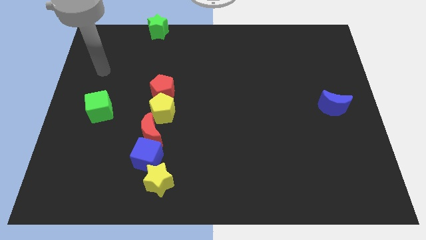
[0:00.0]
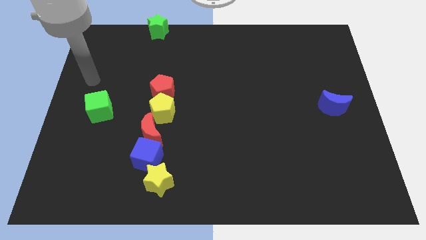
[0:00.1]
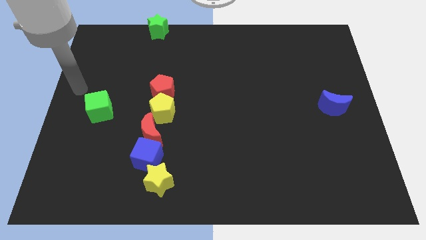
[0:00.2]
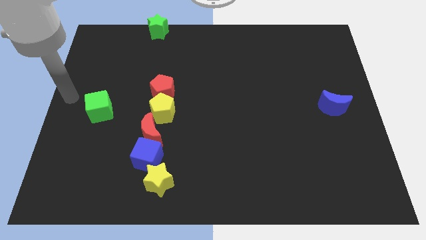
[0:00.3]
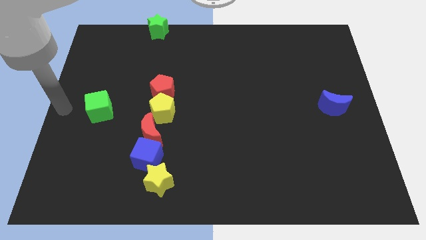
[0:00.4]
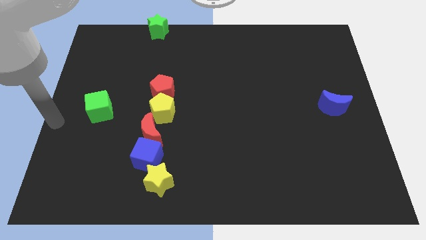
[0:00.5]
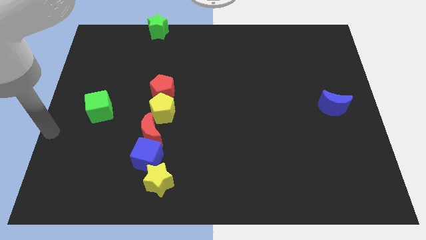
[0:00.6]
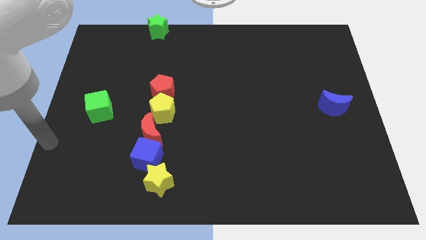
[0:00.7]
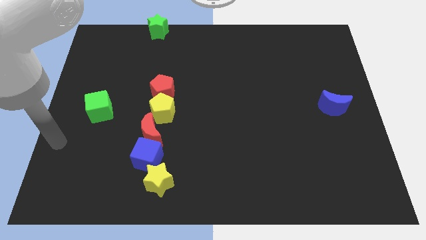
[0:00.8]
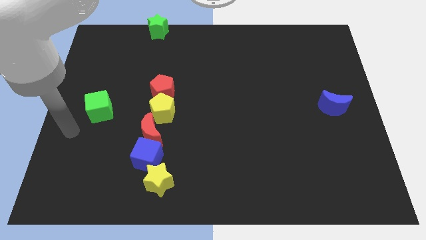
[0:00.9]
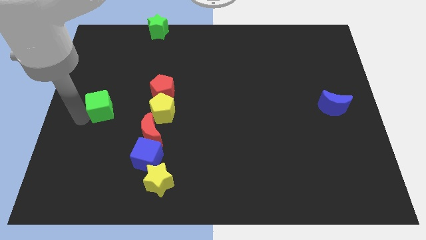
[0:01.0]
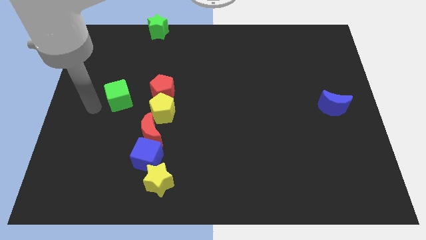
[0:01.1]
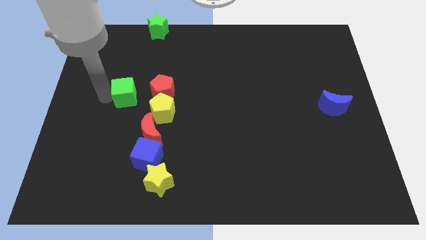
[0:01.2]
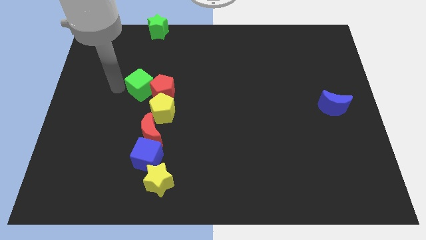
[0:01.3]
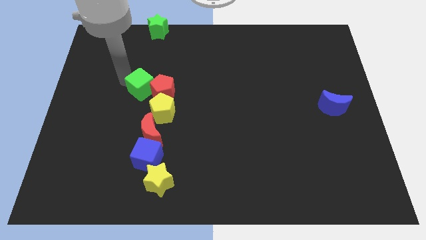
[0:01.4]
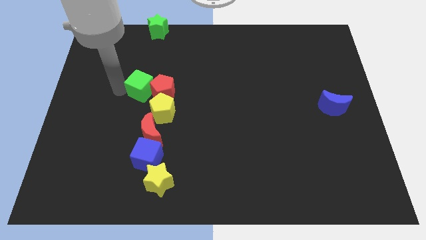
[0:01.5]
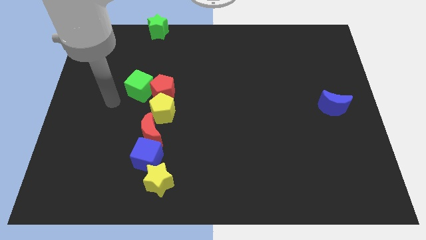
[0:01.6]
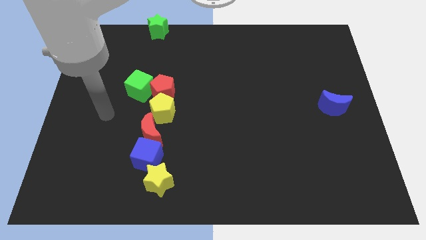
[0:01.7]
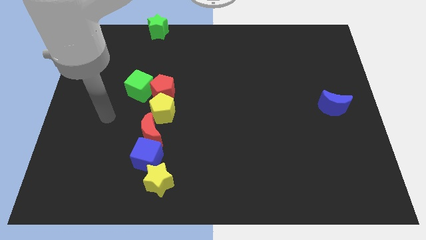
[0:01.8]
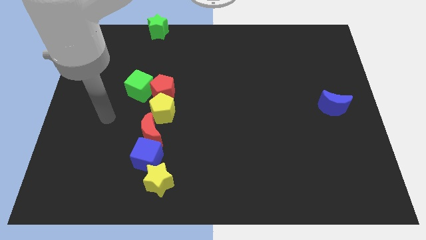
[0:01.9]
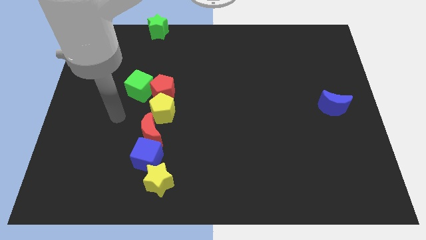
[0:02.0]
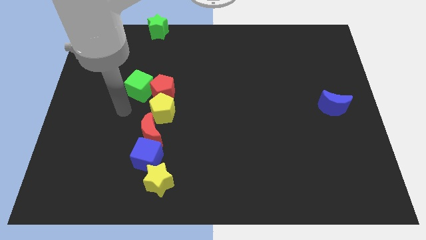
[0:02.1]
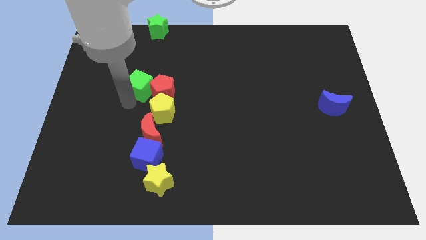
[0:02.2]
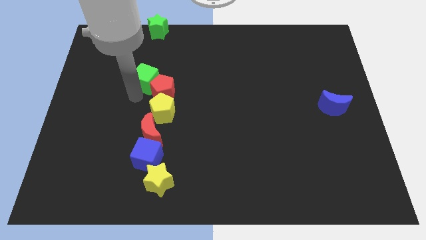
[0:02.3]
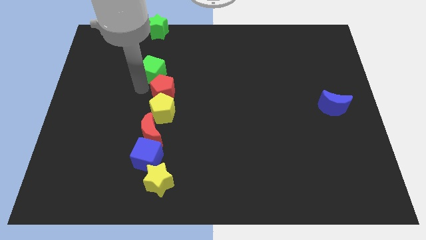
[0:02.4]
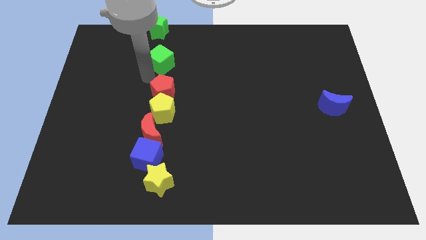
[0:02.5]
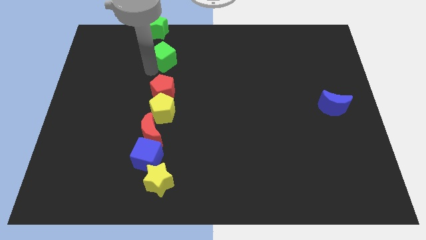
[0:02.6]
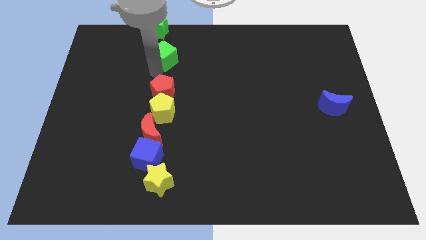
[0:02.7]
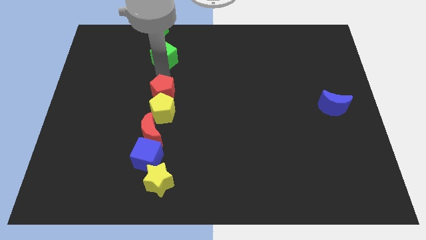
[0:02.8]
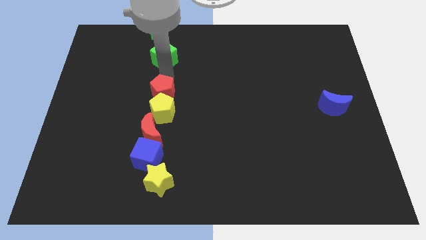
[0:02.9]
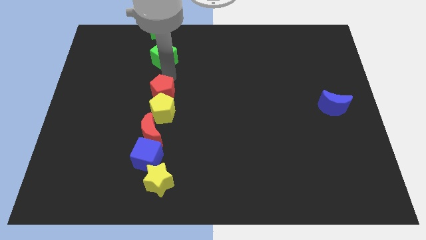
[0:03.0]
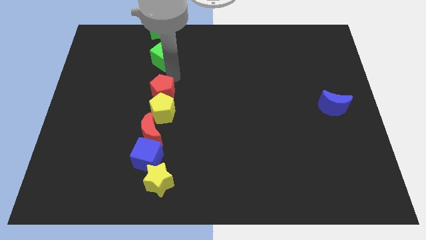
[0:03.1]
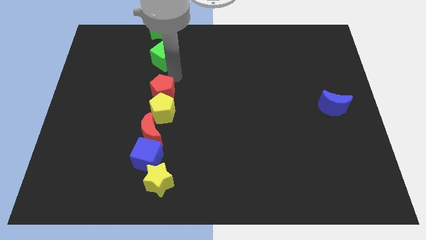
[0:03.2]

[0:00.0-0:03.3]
move green cube above the red pentagon

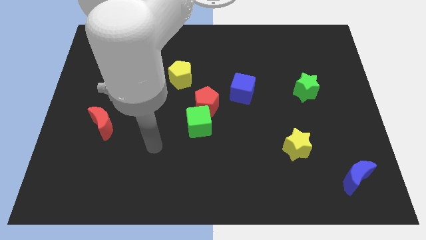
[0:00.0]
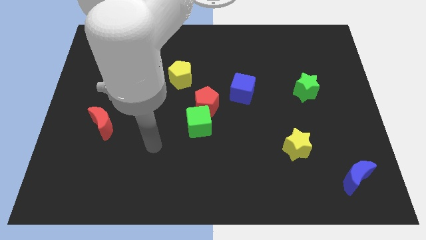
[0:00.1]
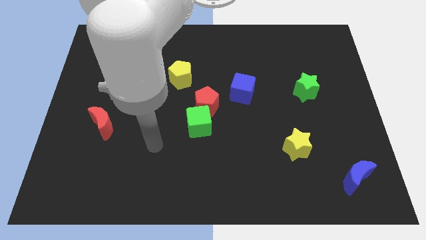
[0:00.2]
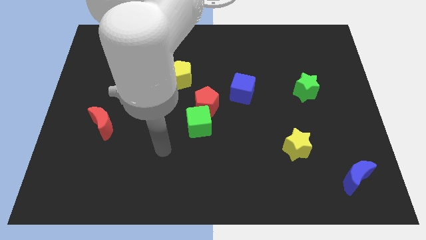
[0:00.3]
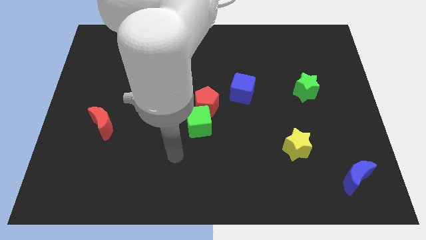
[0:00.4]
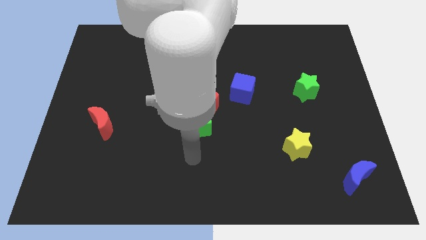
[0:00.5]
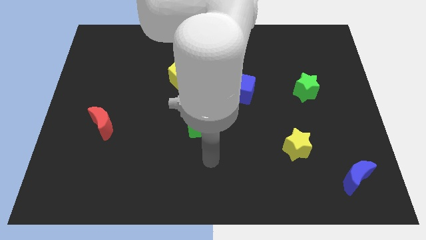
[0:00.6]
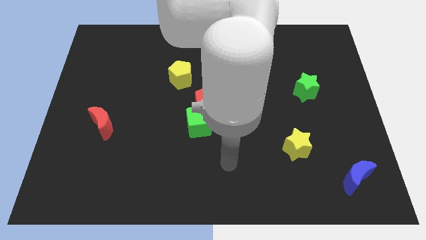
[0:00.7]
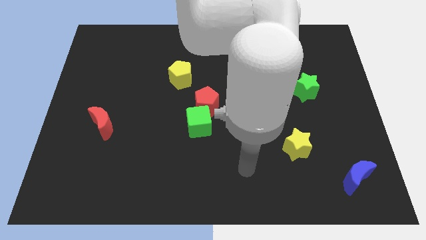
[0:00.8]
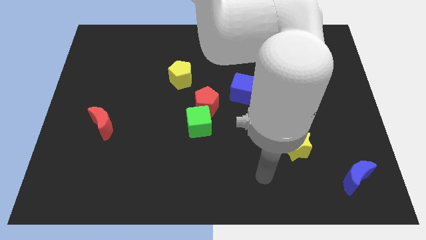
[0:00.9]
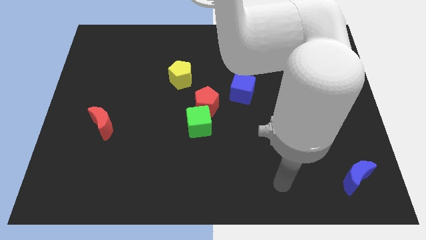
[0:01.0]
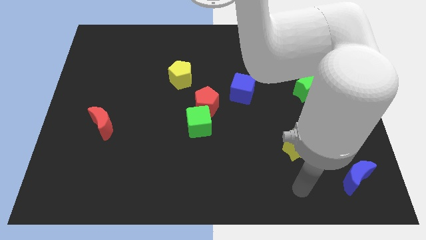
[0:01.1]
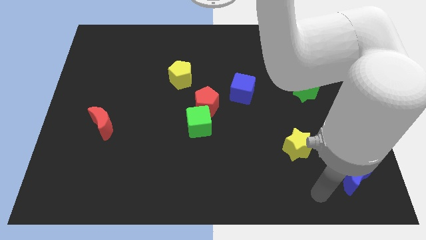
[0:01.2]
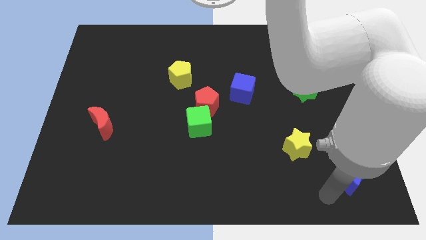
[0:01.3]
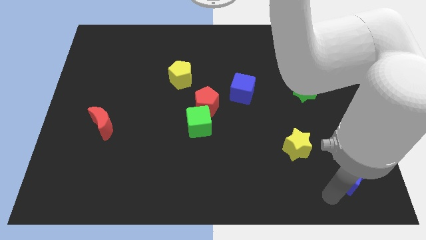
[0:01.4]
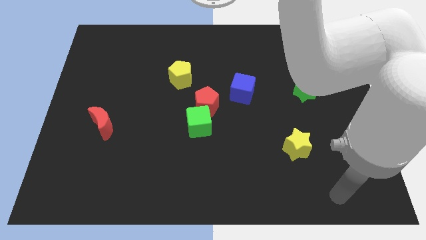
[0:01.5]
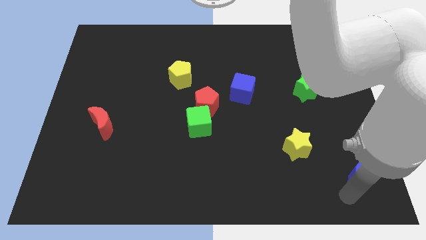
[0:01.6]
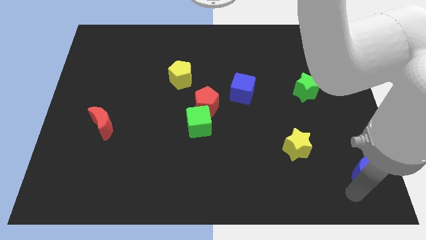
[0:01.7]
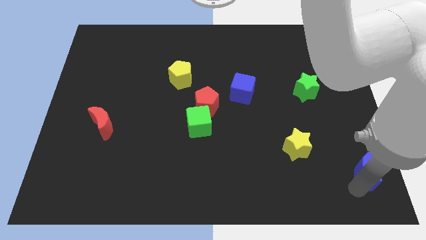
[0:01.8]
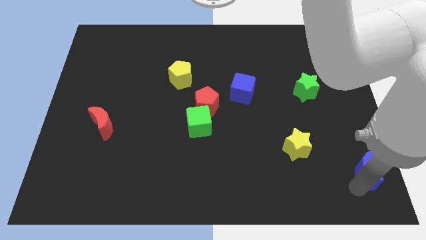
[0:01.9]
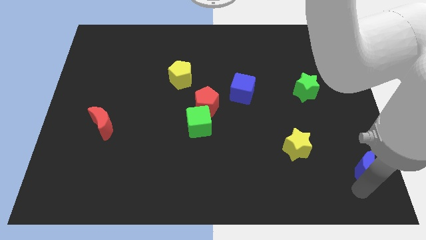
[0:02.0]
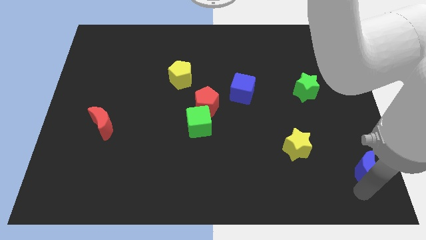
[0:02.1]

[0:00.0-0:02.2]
move your arm to the blue moon

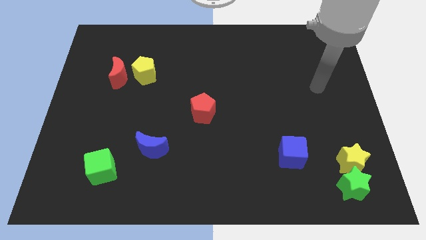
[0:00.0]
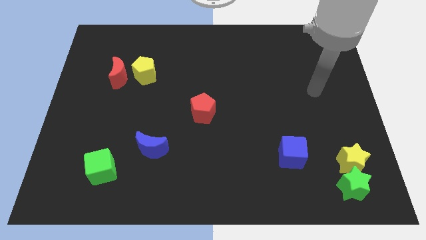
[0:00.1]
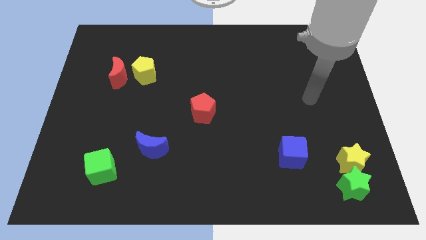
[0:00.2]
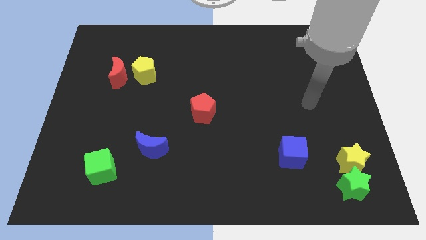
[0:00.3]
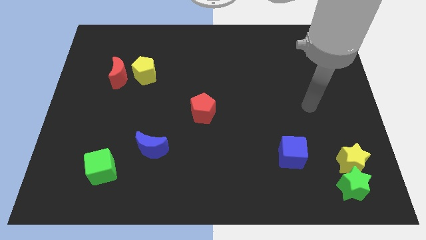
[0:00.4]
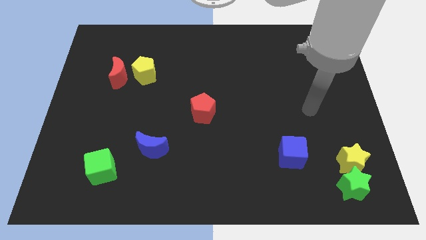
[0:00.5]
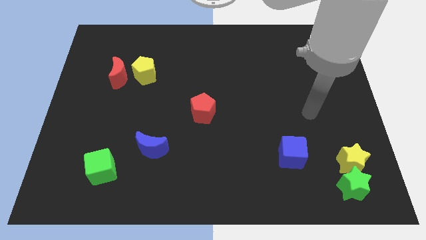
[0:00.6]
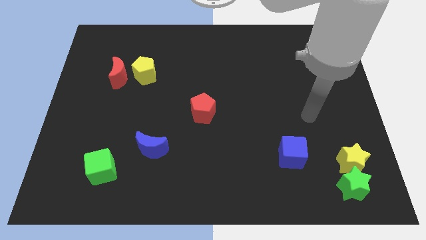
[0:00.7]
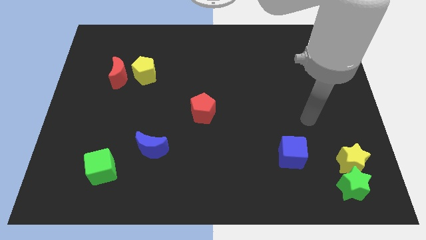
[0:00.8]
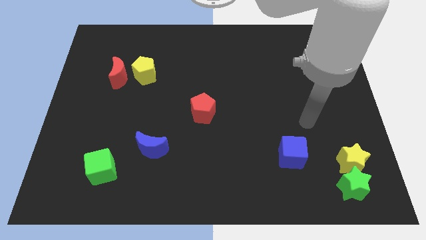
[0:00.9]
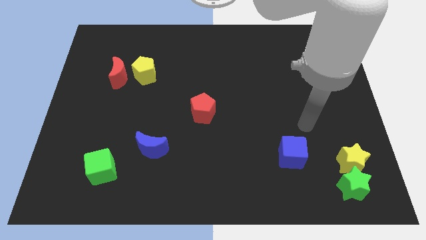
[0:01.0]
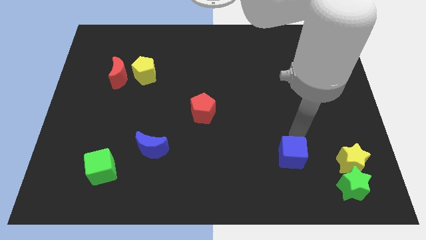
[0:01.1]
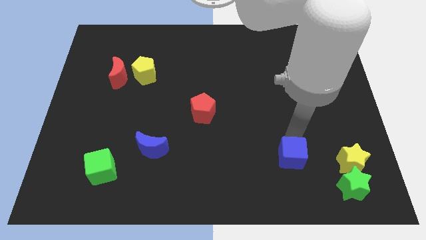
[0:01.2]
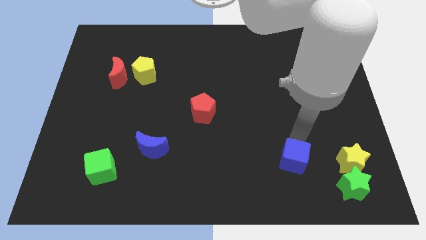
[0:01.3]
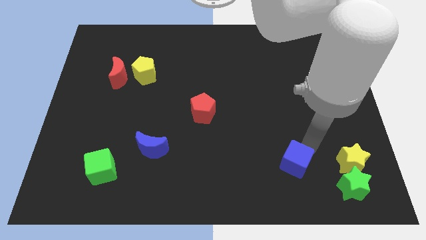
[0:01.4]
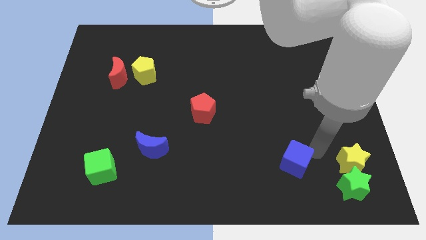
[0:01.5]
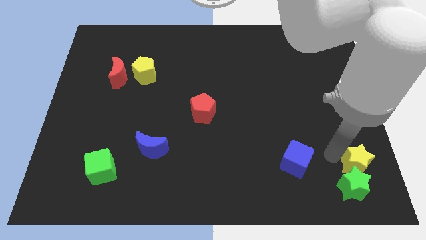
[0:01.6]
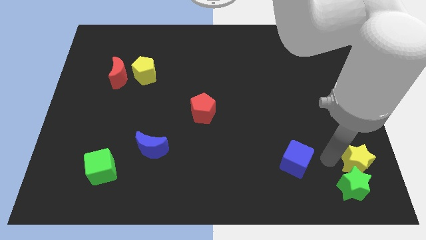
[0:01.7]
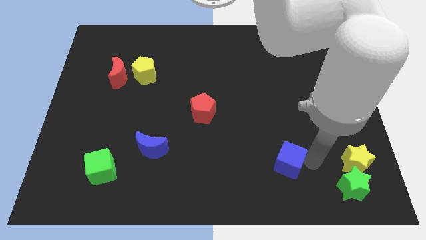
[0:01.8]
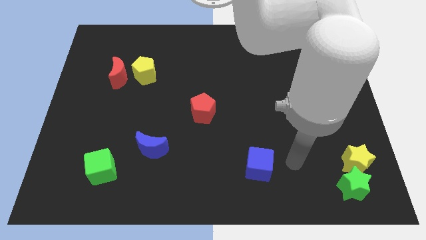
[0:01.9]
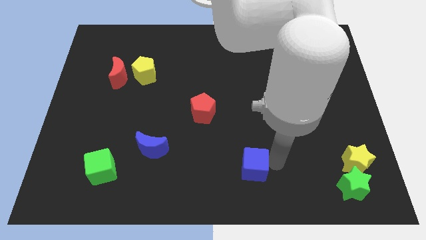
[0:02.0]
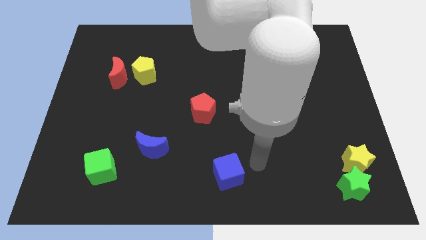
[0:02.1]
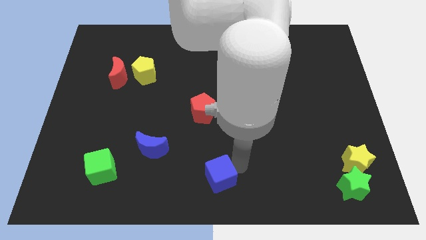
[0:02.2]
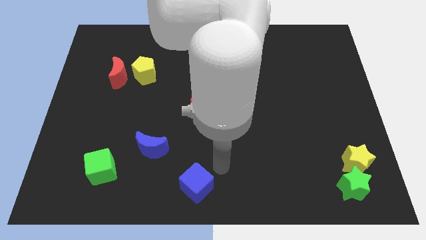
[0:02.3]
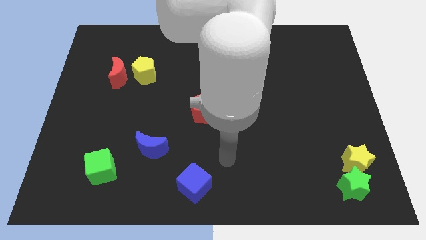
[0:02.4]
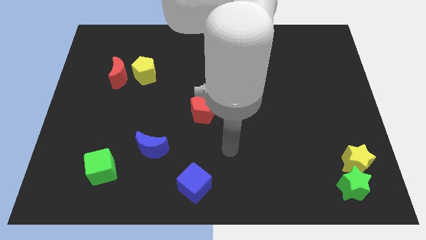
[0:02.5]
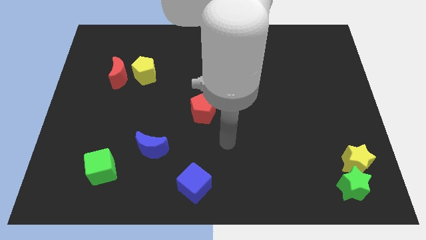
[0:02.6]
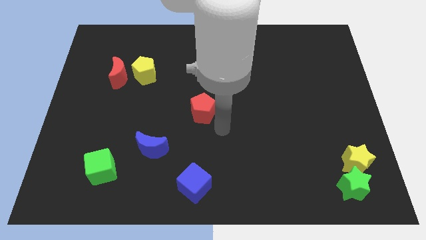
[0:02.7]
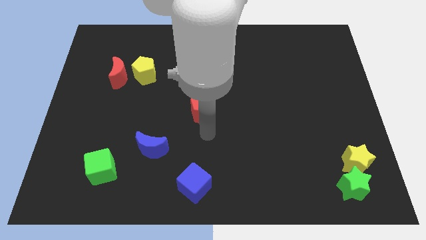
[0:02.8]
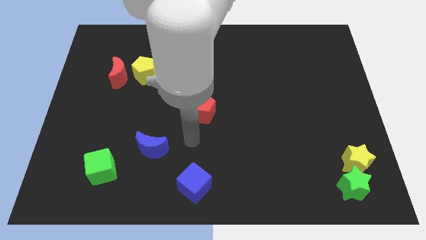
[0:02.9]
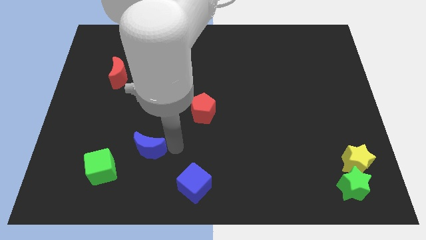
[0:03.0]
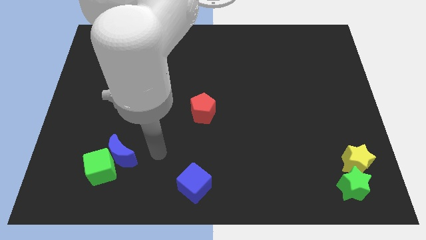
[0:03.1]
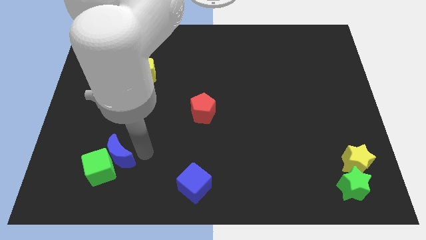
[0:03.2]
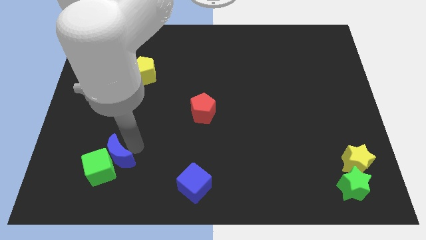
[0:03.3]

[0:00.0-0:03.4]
move the blue cube towards the bottom center
